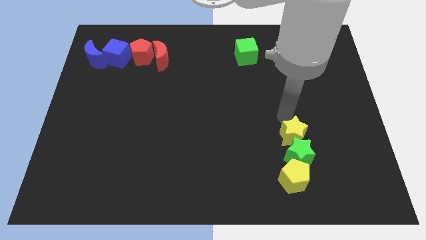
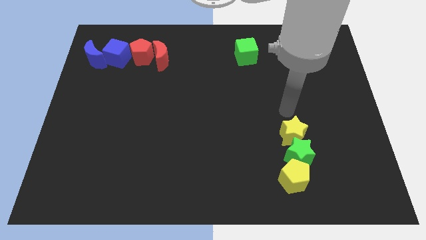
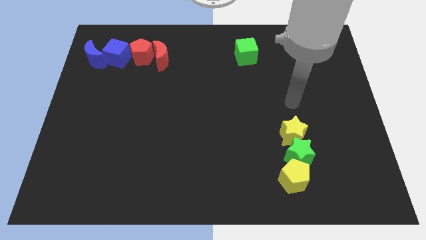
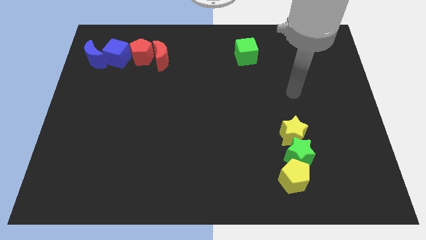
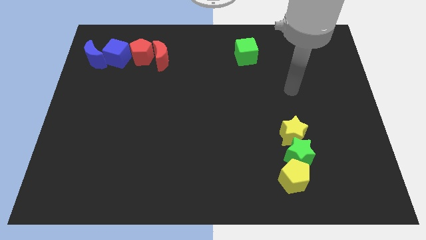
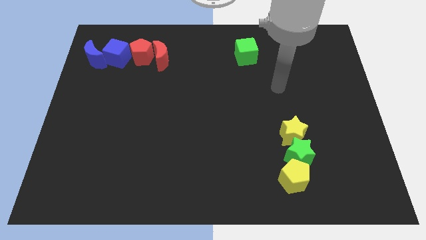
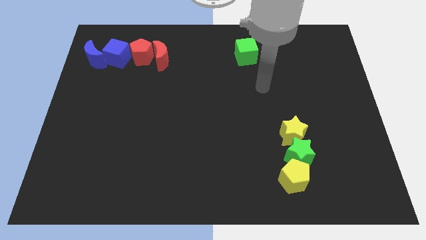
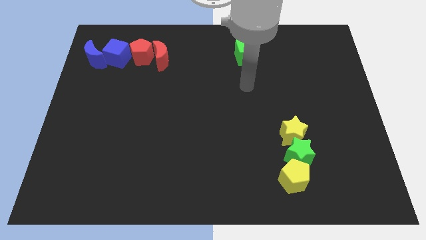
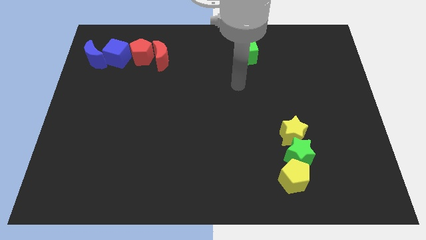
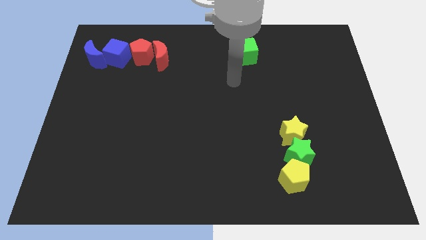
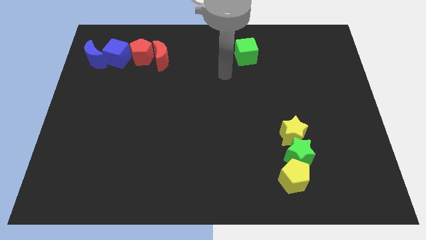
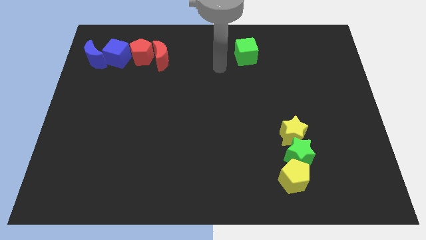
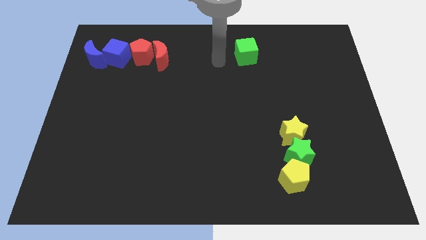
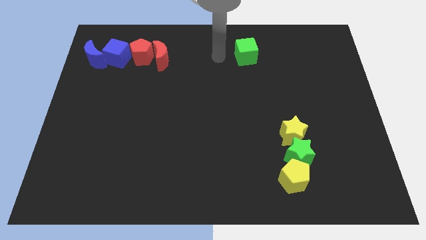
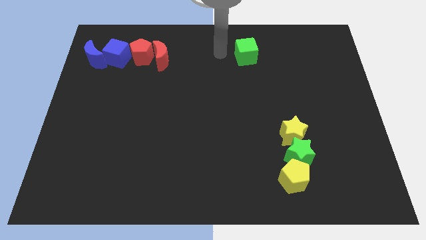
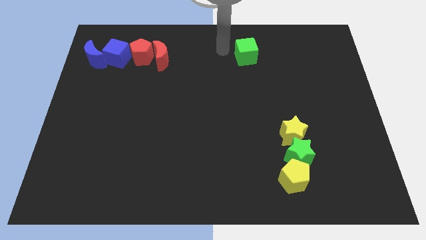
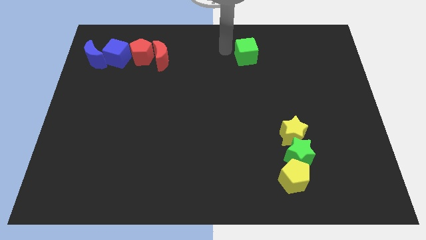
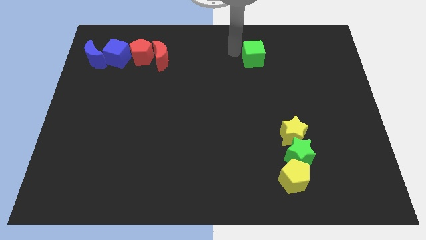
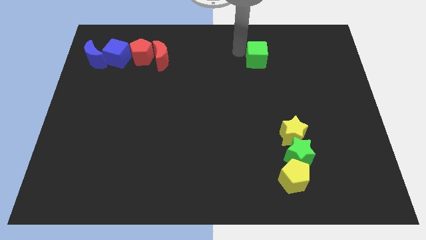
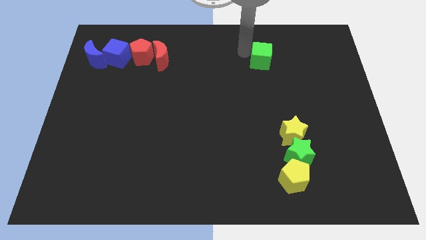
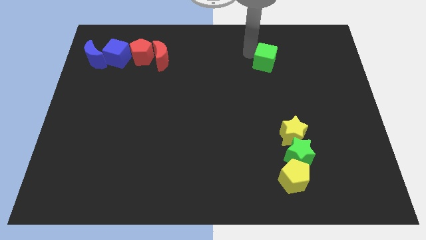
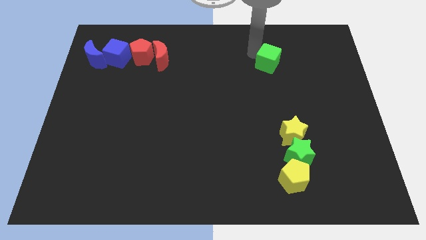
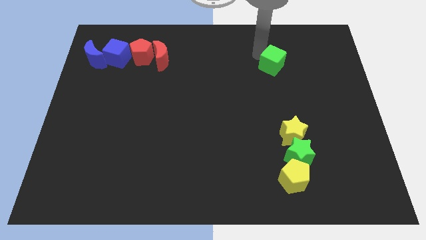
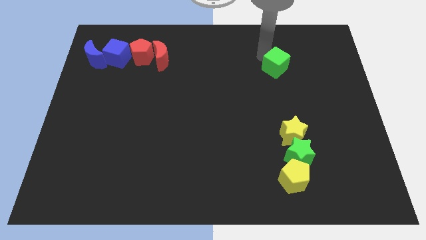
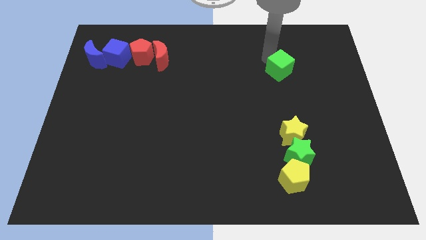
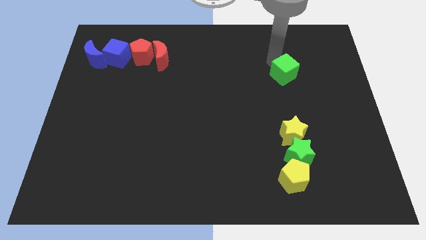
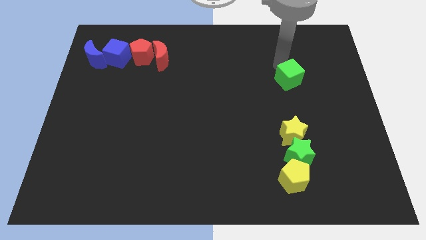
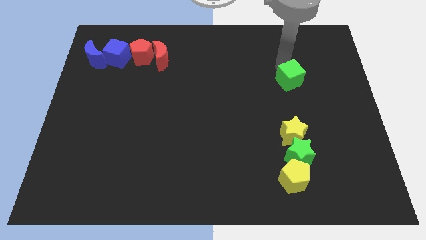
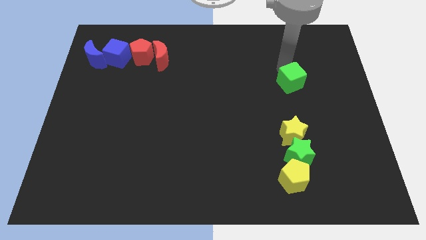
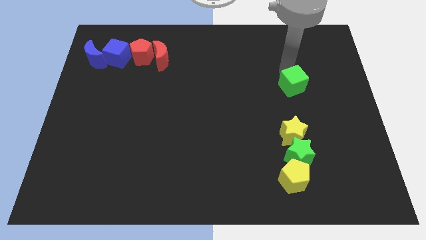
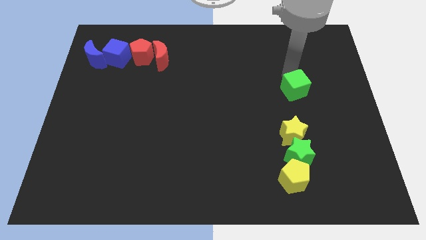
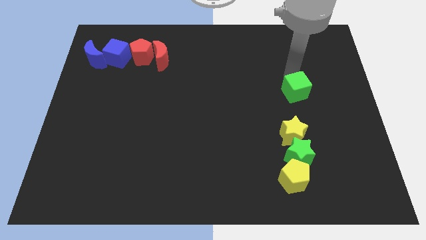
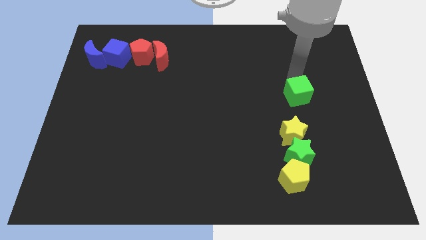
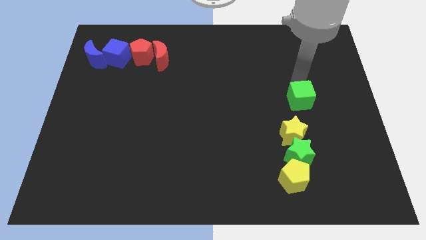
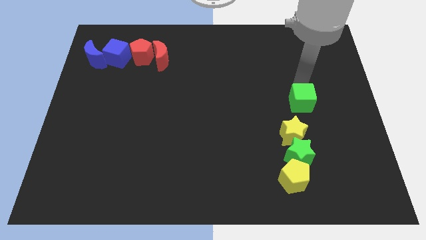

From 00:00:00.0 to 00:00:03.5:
place the green cube above the yellow star

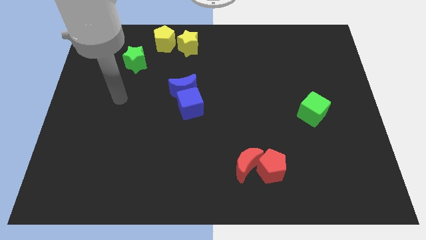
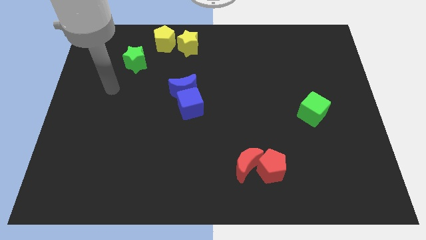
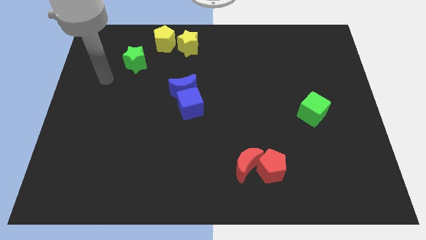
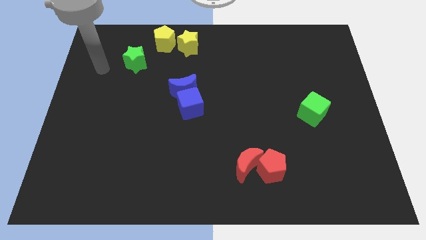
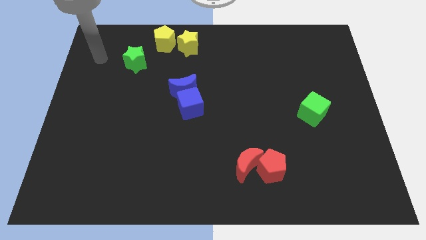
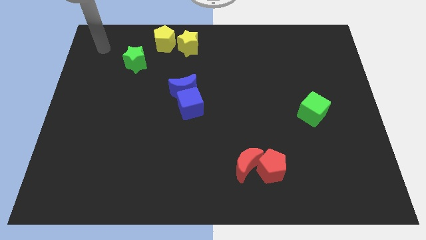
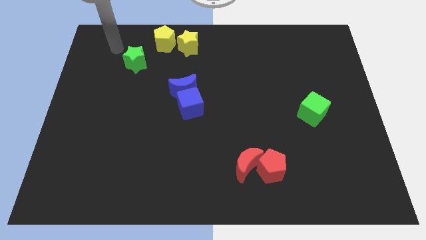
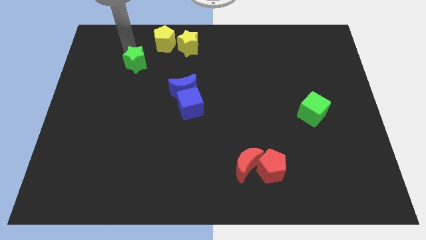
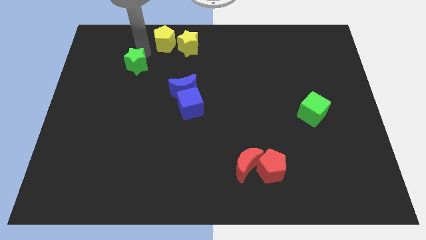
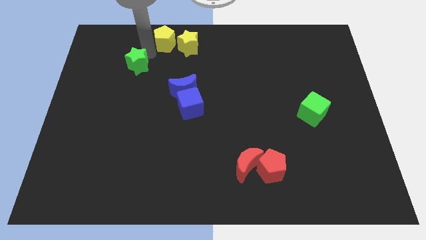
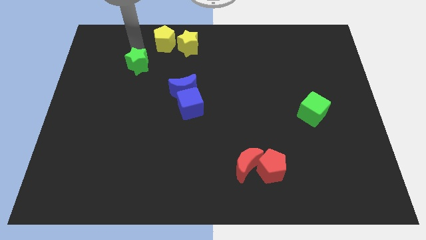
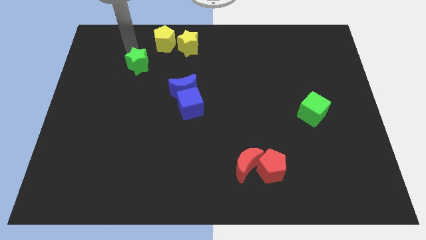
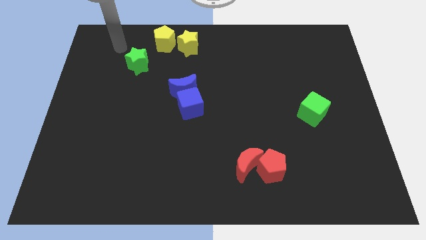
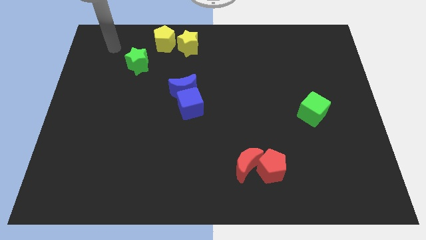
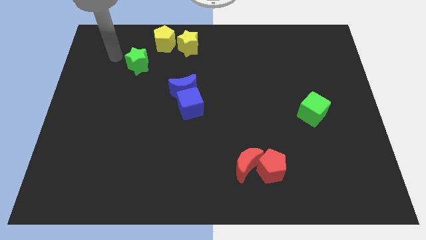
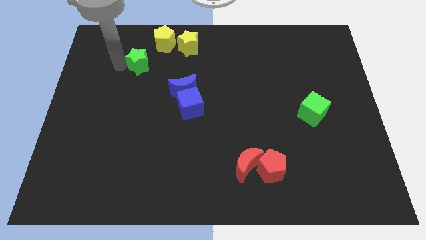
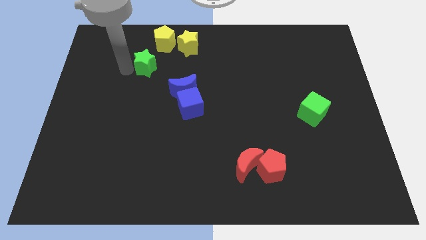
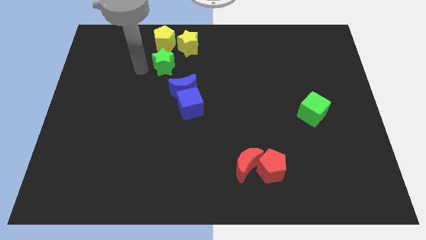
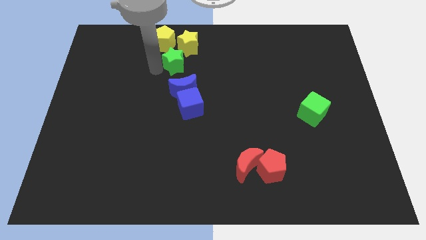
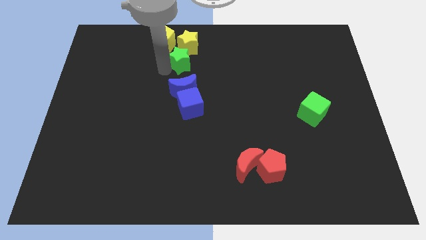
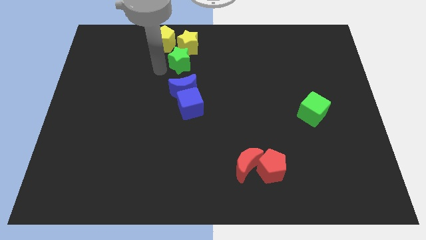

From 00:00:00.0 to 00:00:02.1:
move green star above blue blocks

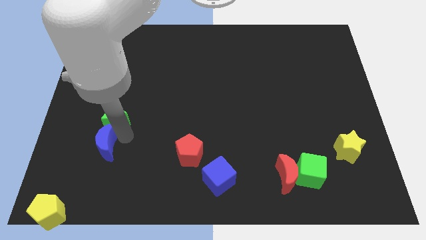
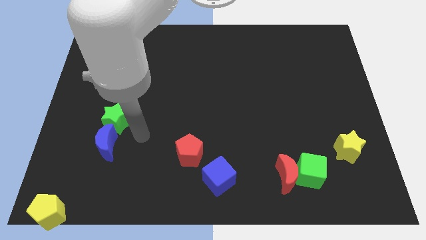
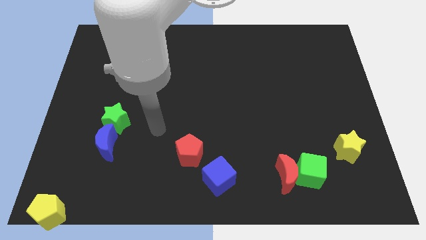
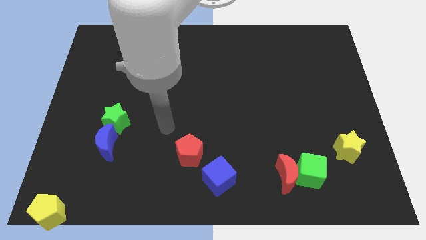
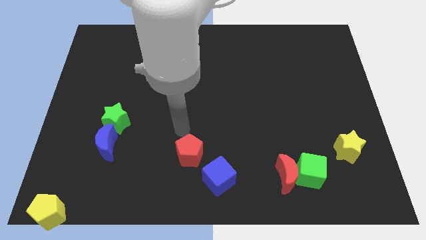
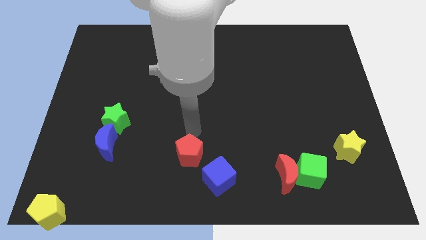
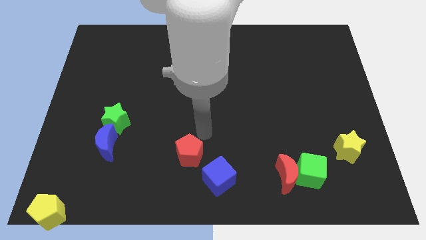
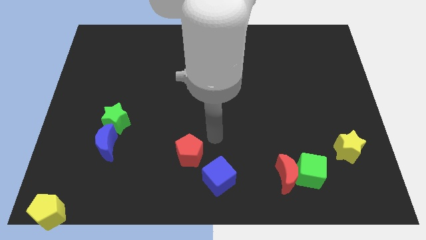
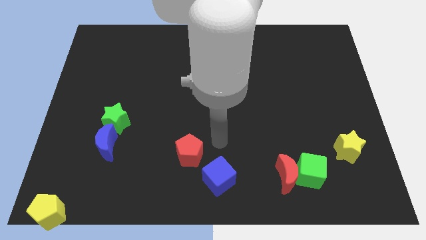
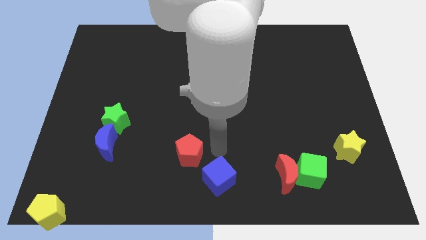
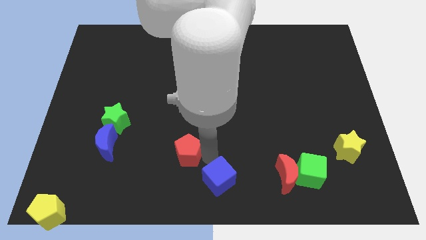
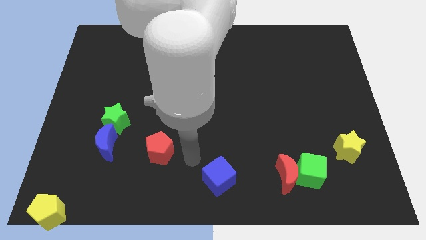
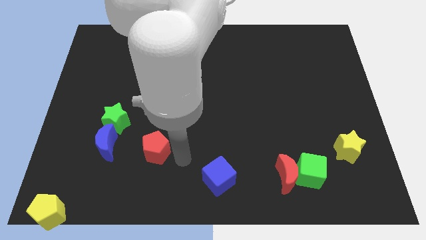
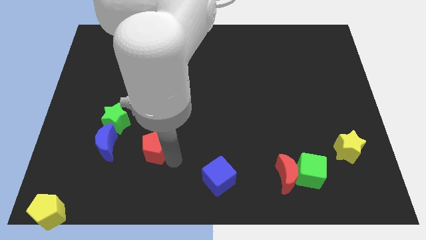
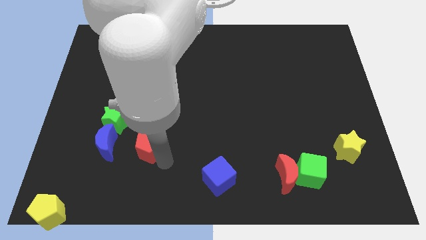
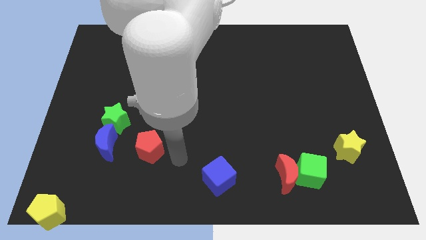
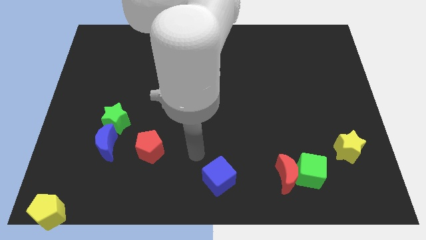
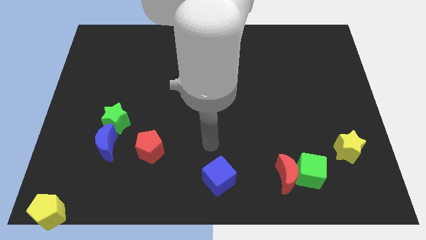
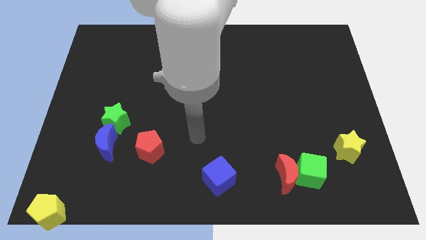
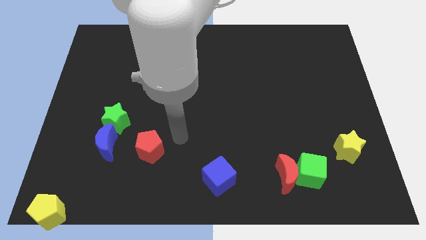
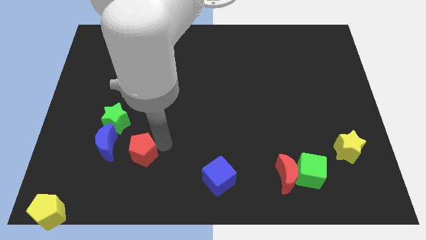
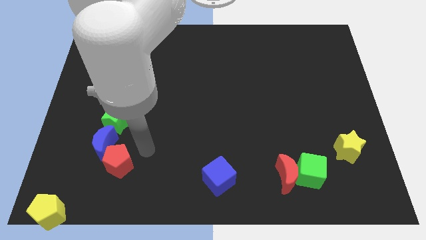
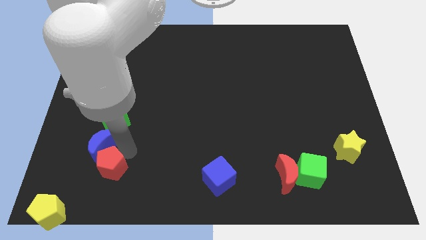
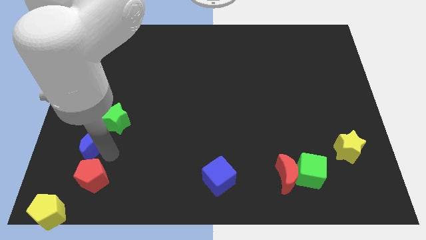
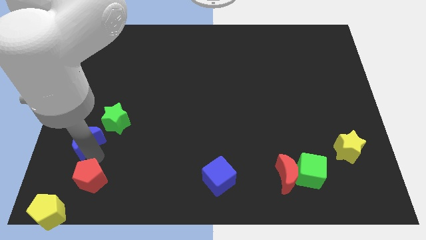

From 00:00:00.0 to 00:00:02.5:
push red pentagon in to blue crescent

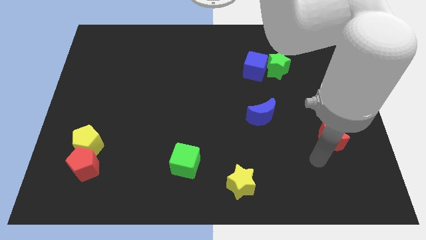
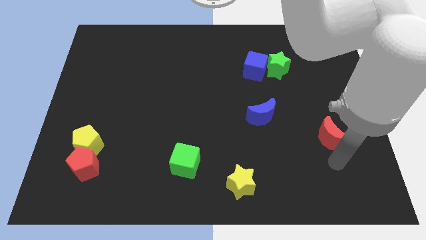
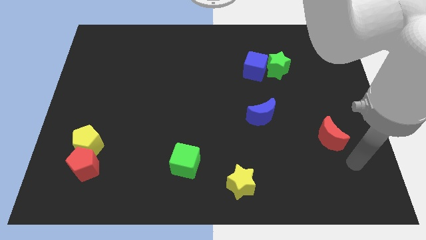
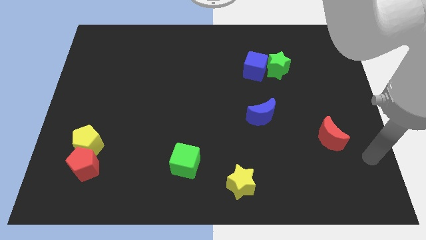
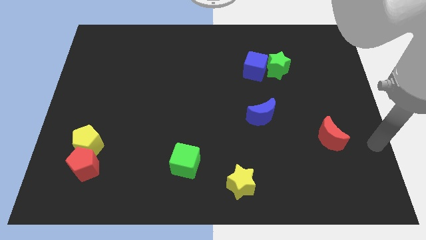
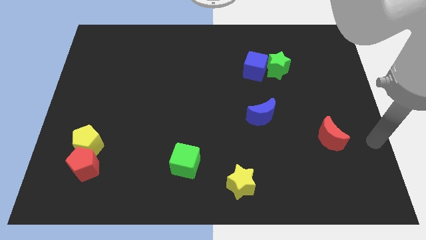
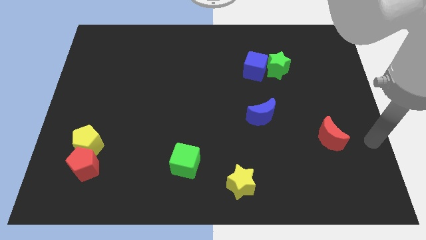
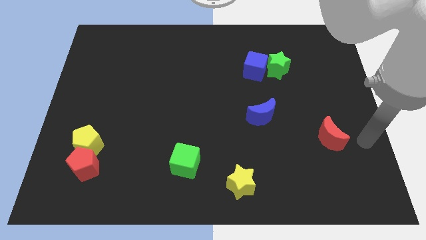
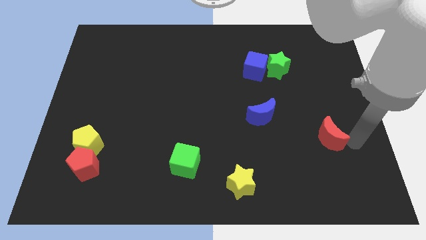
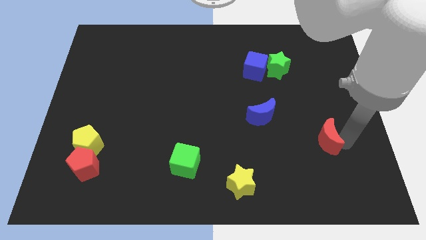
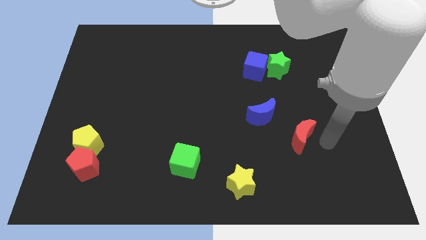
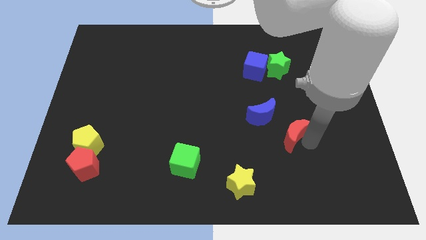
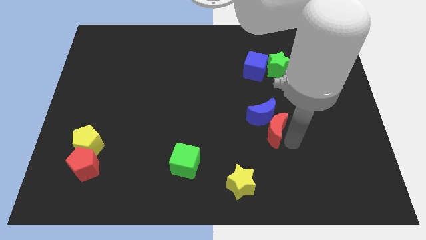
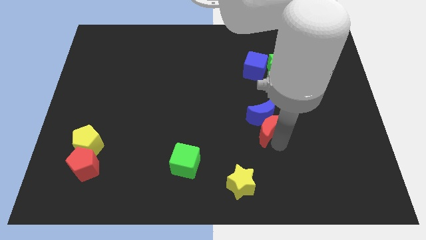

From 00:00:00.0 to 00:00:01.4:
push the red moon at the bottom of blue moon
